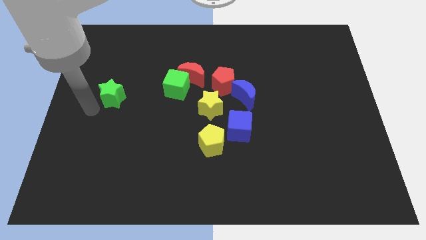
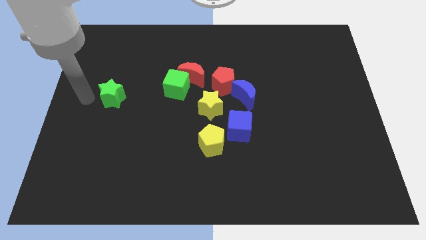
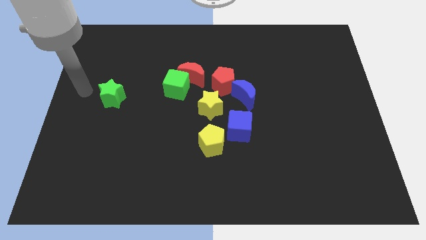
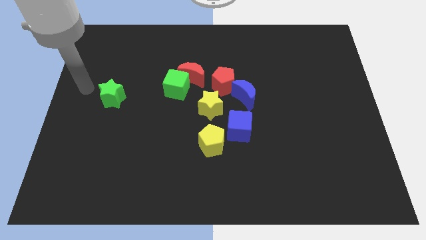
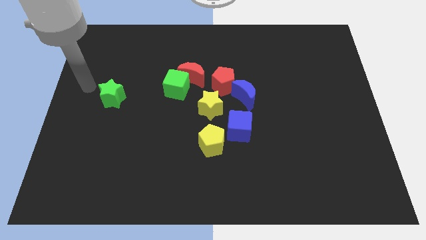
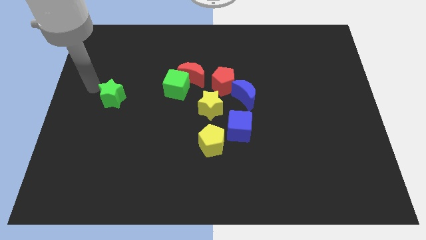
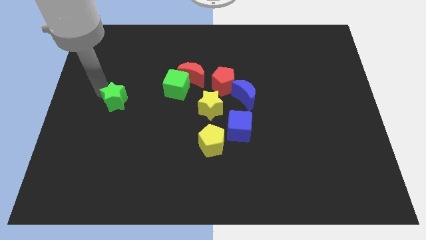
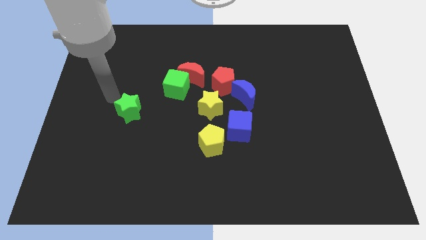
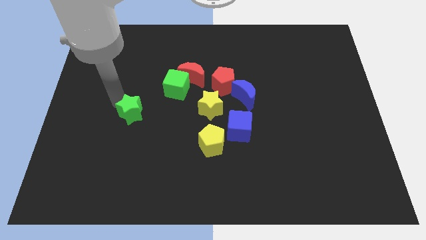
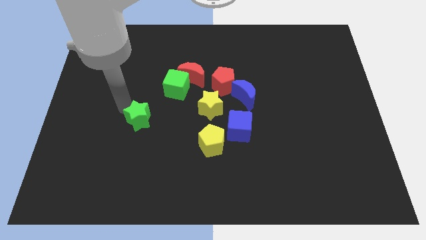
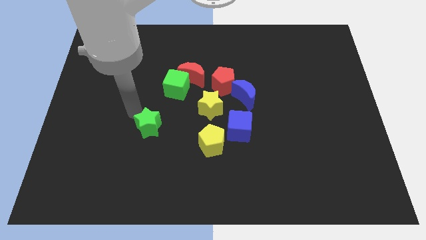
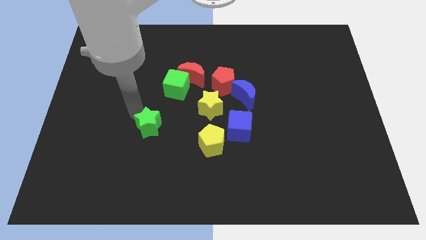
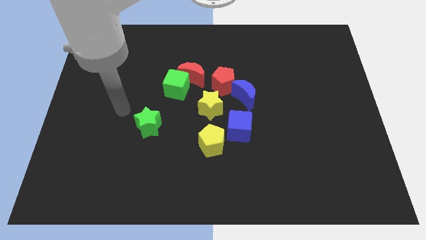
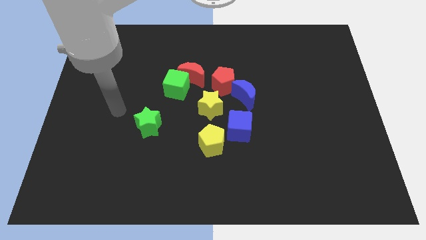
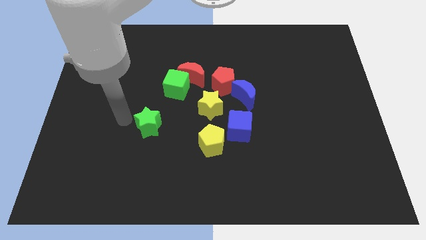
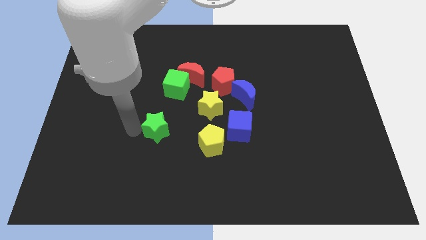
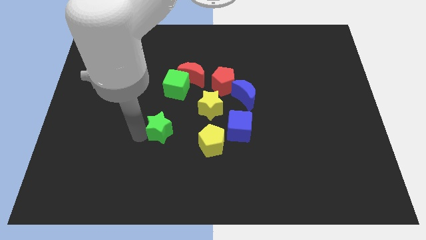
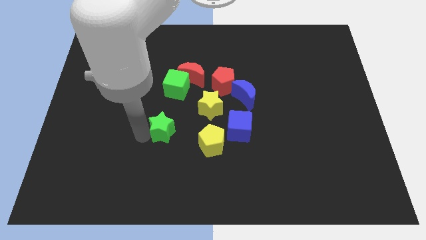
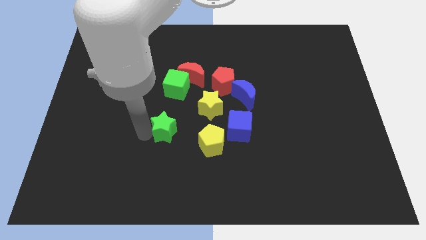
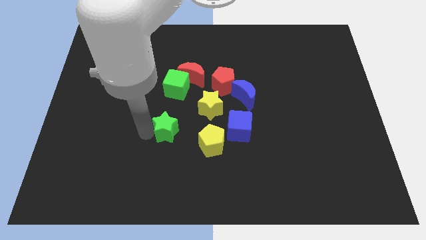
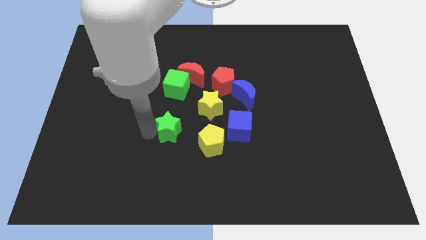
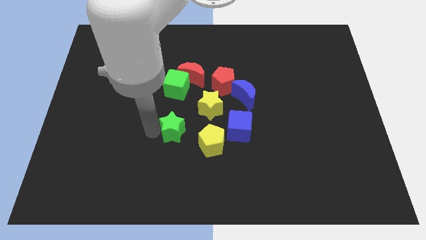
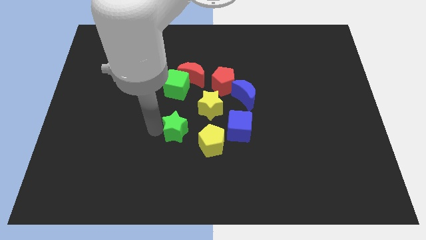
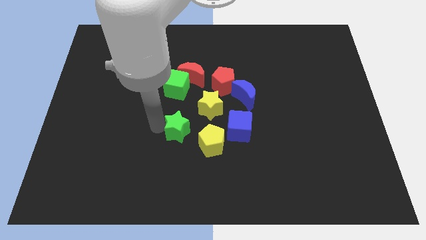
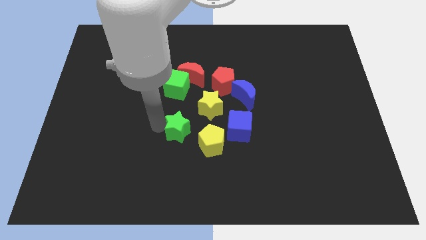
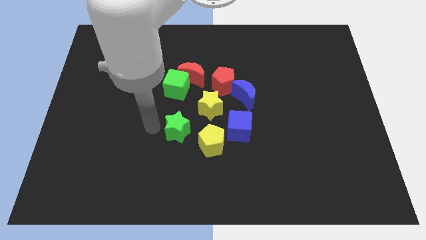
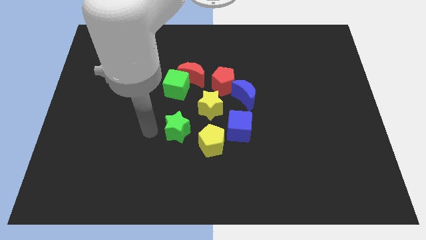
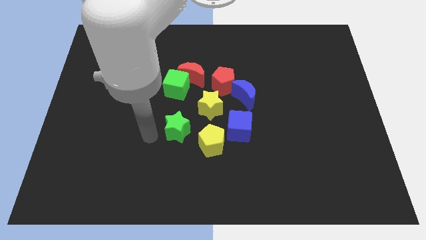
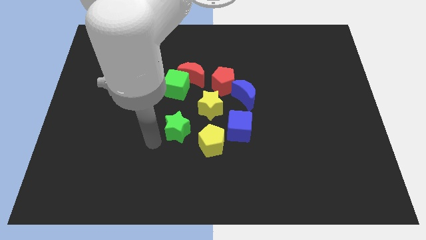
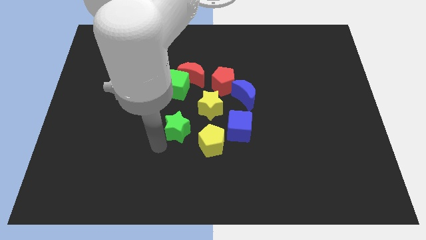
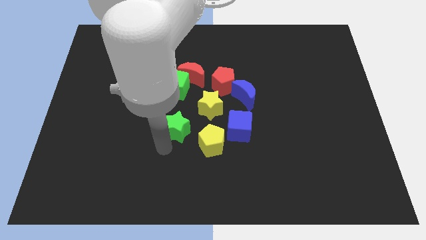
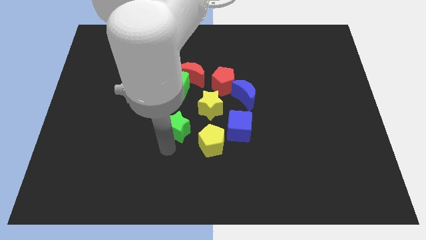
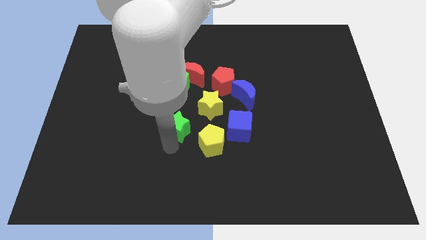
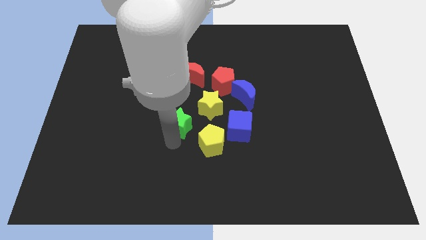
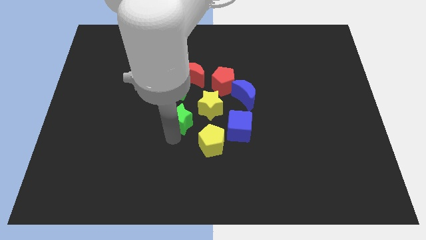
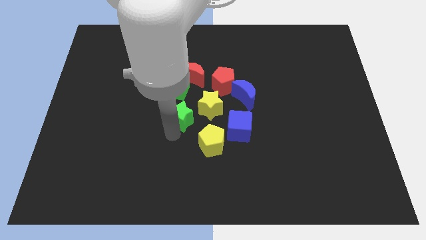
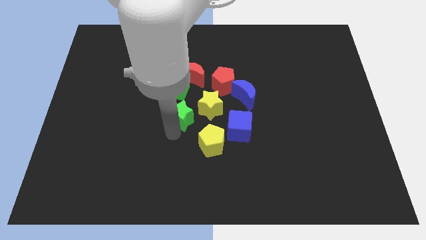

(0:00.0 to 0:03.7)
push the green star towards the yellow star

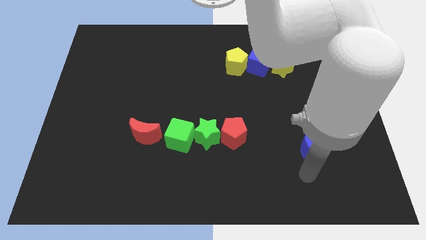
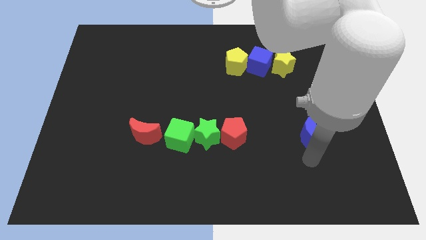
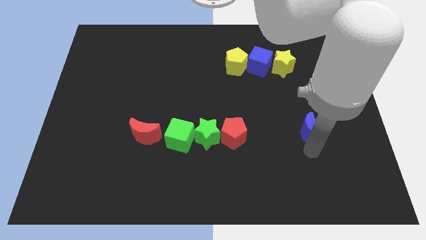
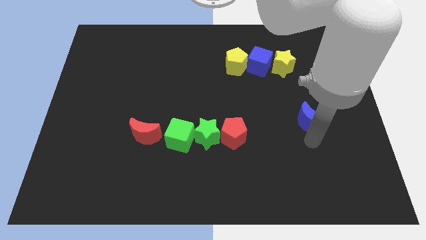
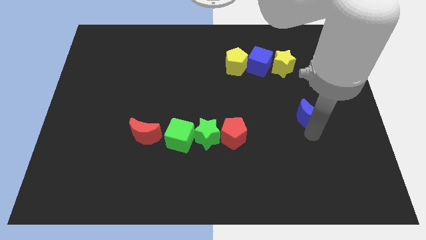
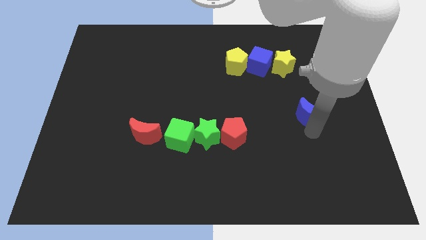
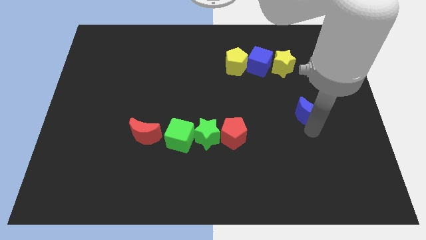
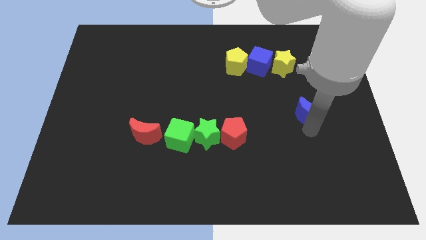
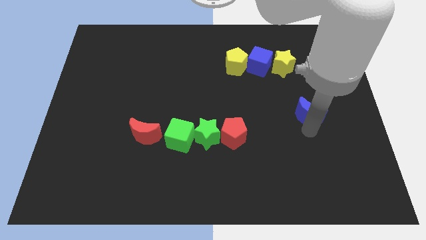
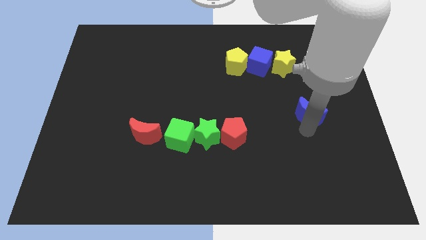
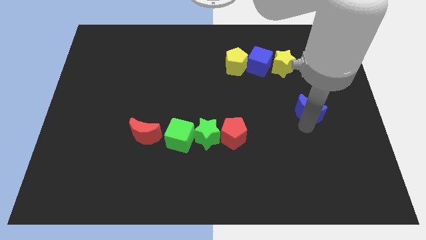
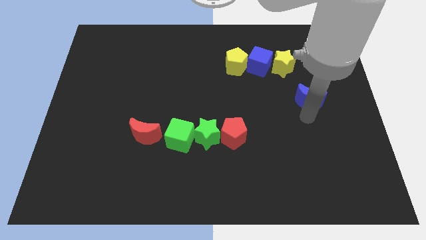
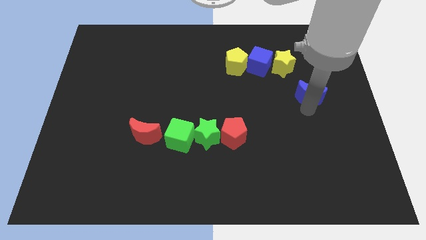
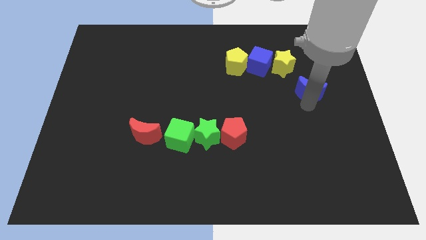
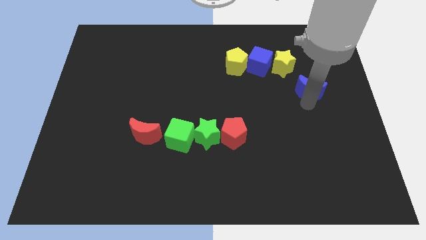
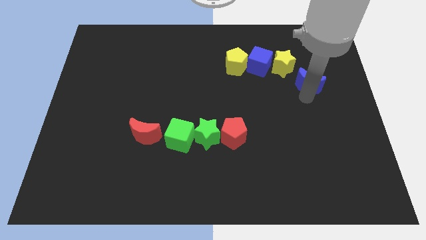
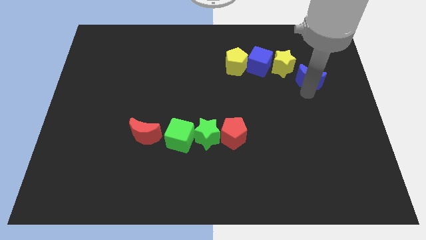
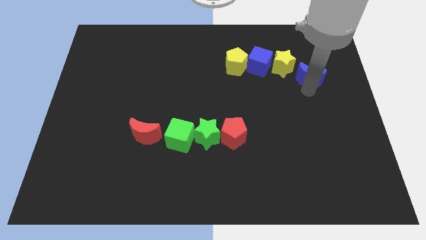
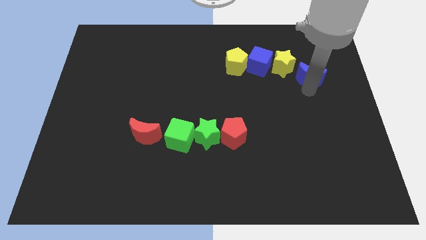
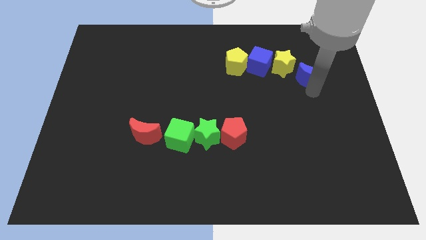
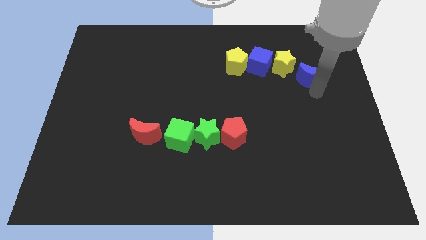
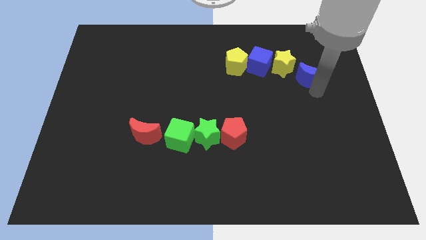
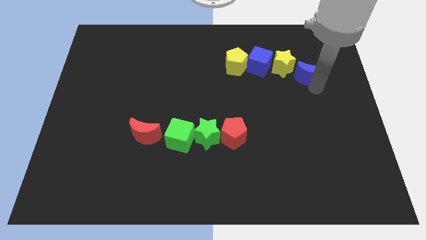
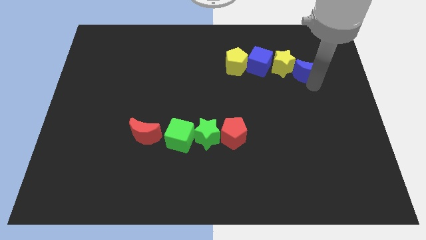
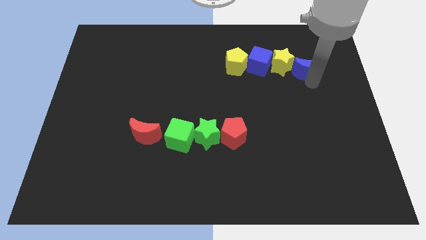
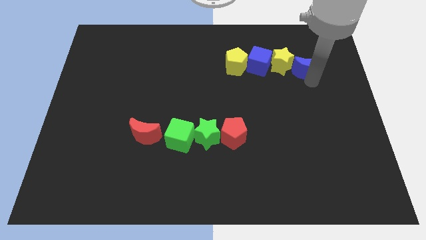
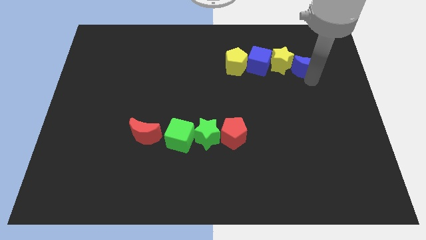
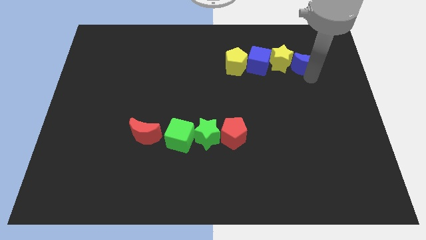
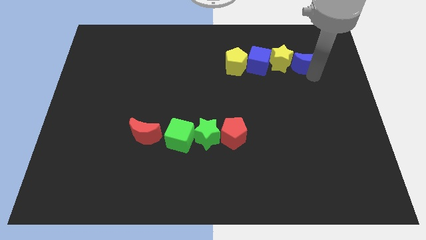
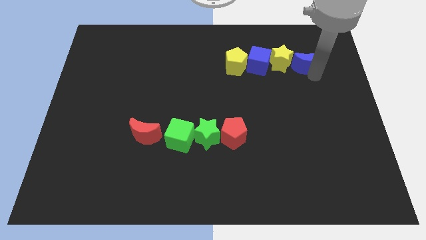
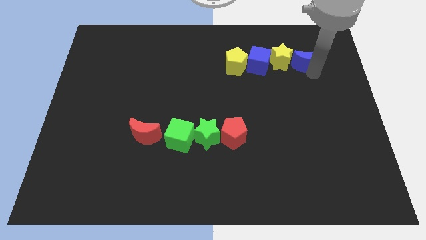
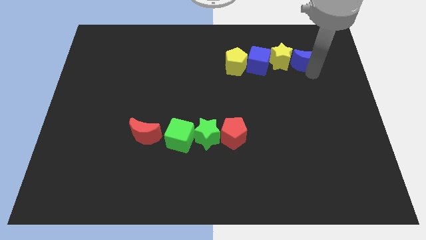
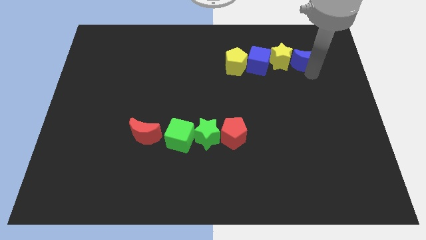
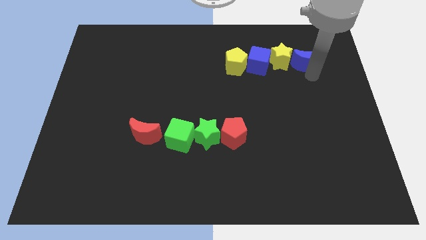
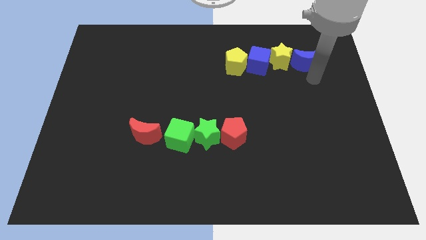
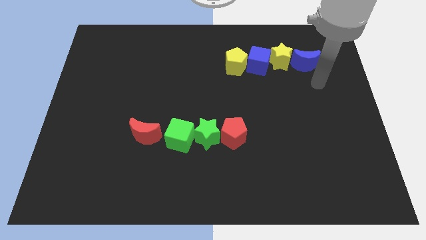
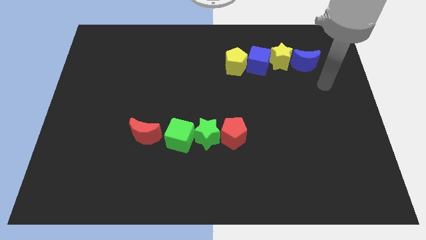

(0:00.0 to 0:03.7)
push the blue crescent to the right of the yellow star

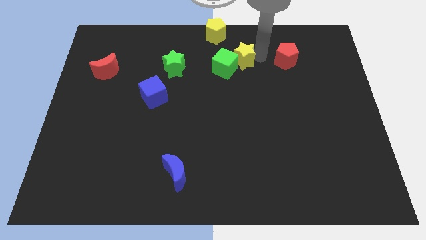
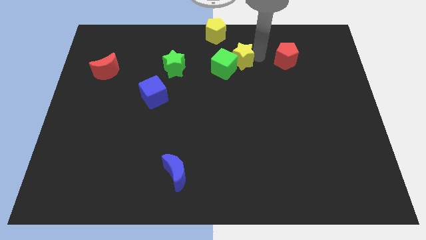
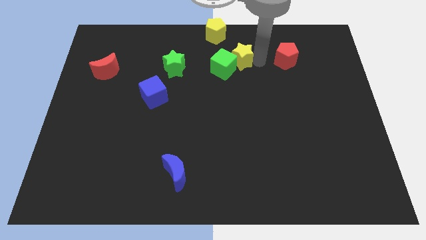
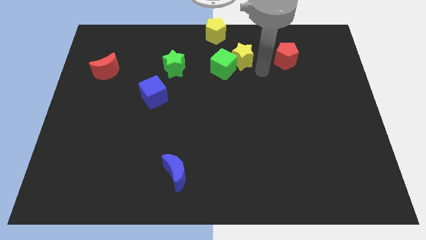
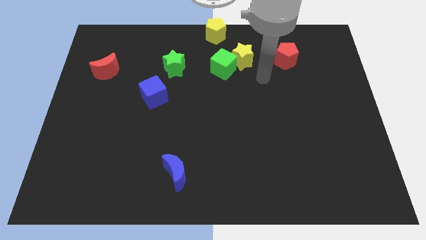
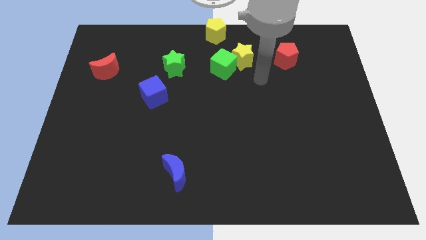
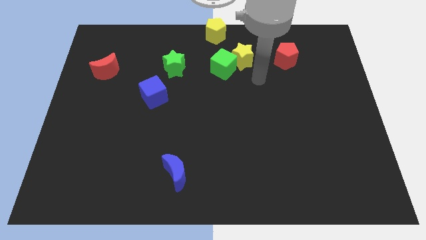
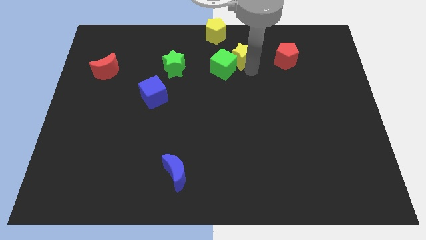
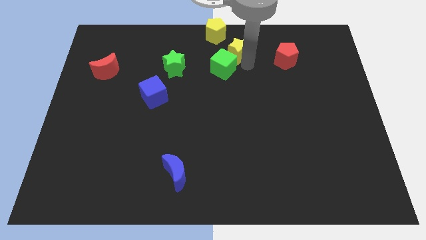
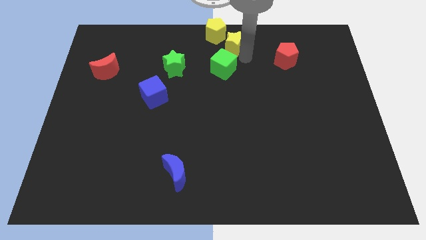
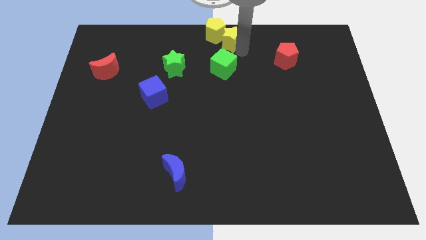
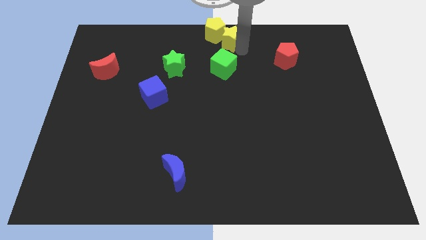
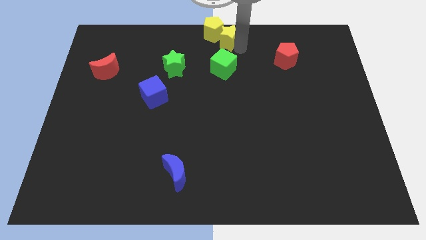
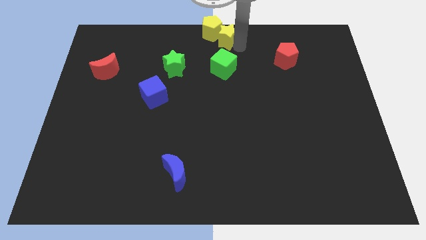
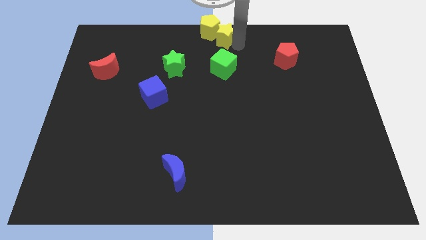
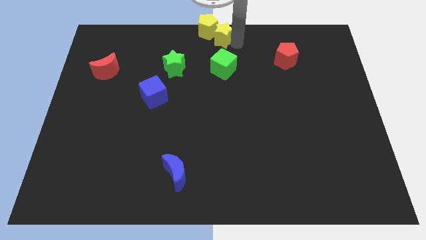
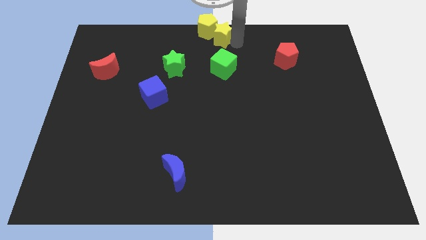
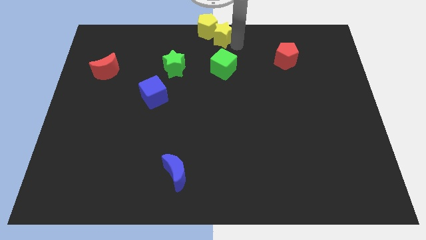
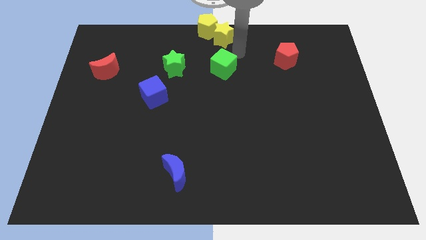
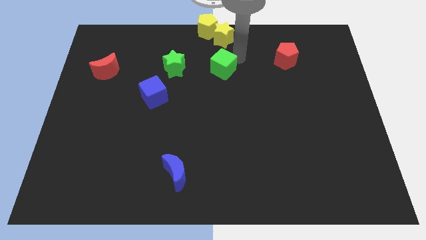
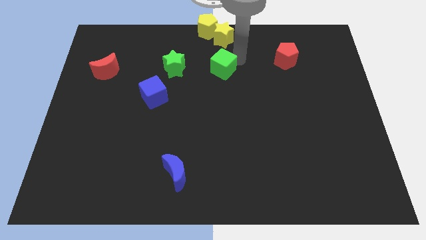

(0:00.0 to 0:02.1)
push the yellow star into the yellow pentagon
